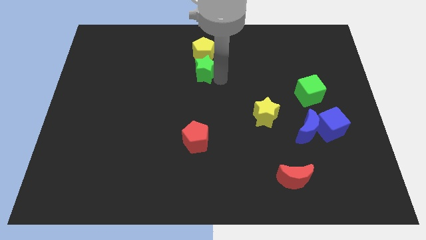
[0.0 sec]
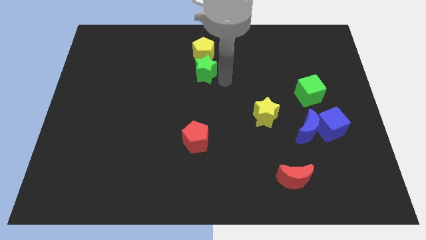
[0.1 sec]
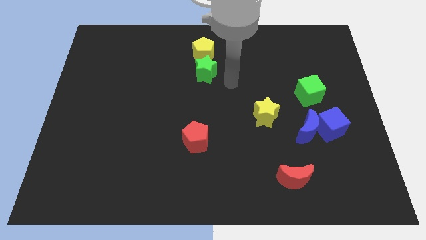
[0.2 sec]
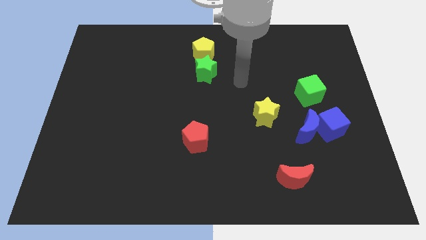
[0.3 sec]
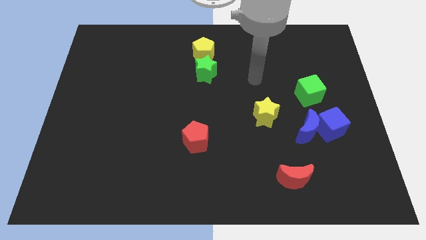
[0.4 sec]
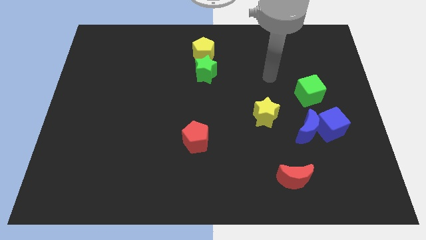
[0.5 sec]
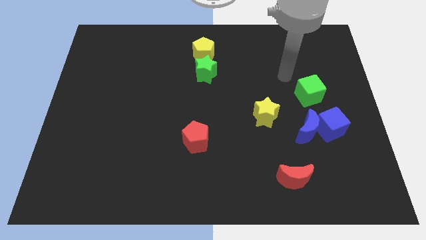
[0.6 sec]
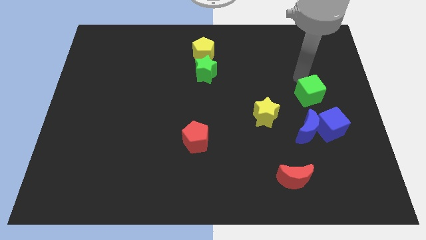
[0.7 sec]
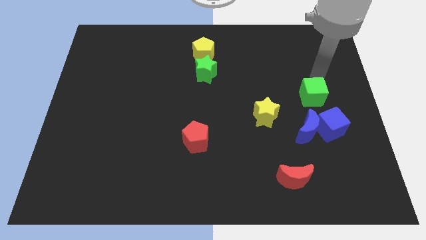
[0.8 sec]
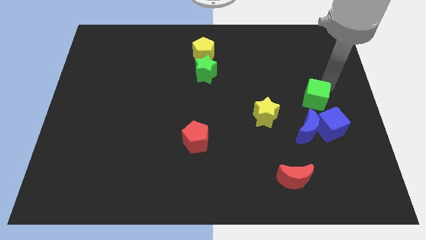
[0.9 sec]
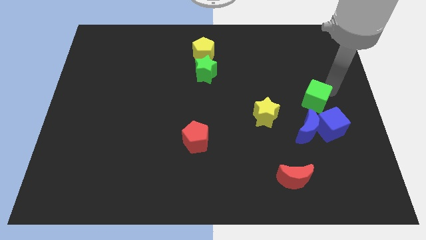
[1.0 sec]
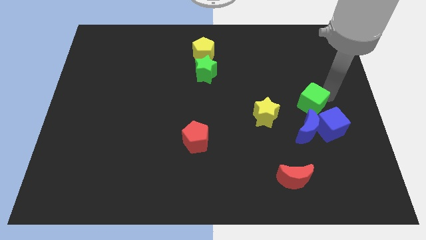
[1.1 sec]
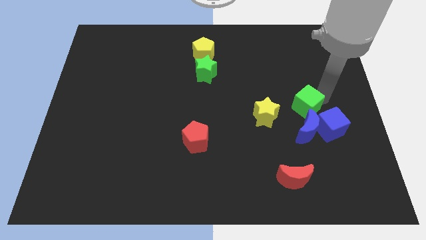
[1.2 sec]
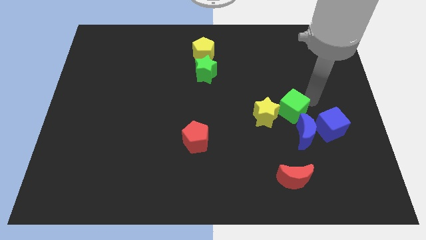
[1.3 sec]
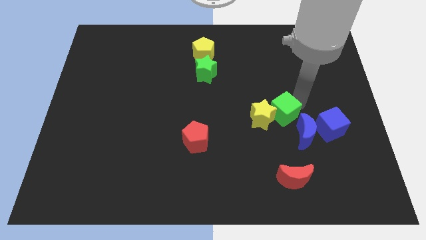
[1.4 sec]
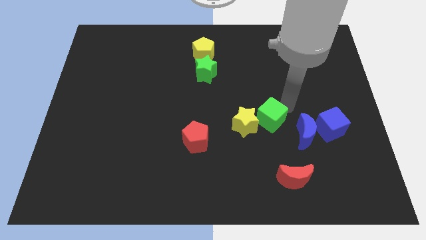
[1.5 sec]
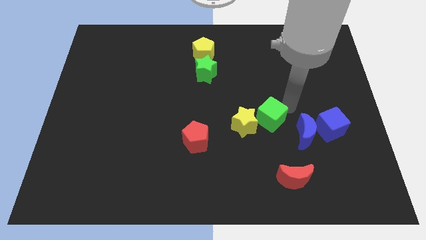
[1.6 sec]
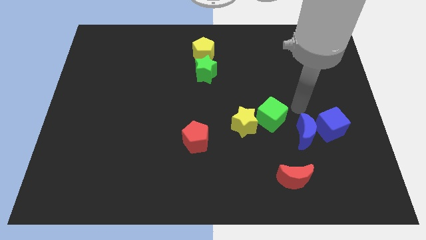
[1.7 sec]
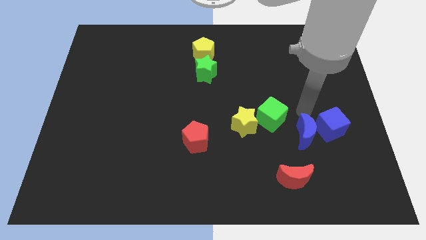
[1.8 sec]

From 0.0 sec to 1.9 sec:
push the green cube into yellow star towards center

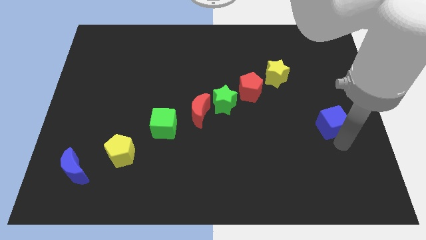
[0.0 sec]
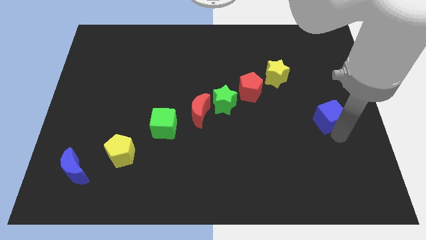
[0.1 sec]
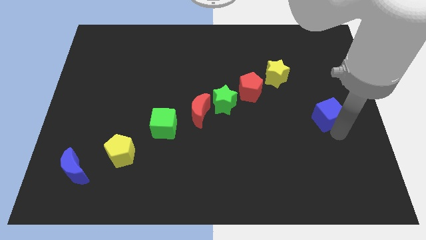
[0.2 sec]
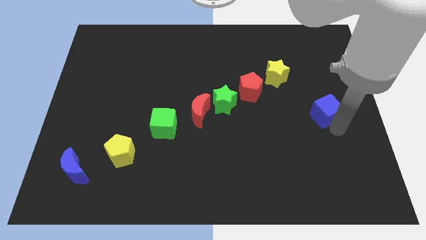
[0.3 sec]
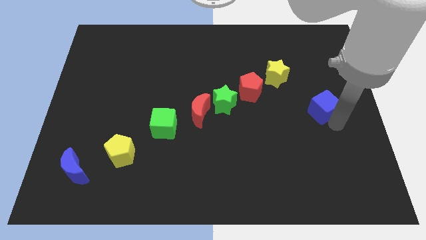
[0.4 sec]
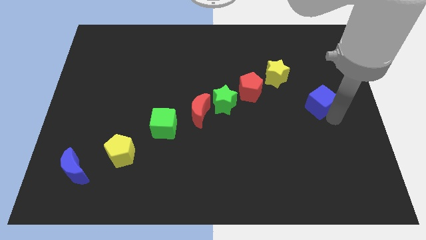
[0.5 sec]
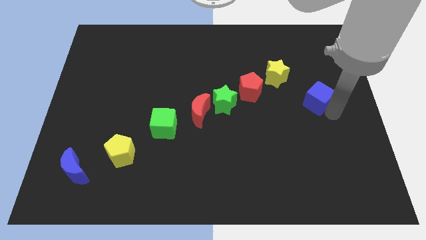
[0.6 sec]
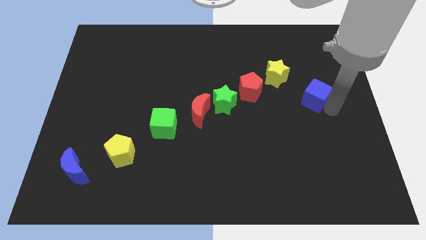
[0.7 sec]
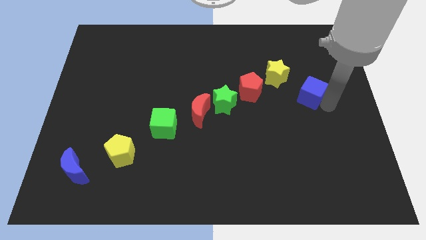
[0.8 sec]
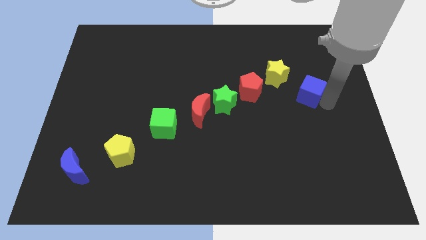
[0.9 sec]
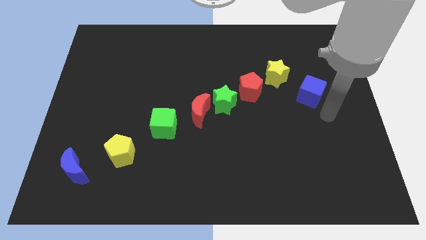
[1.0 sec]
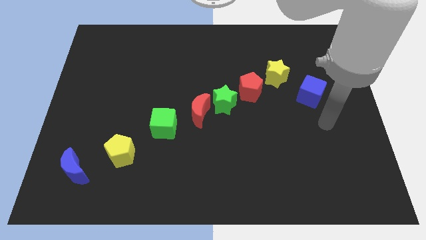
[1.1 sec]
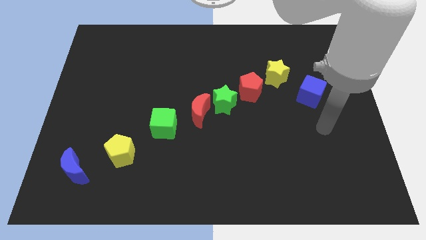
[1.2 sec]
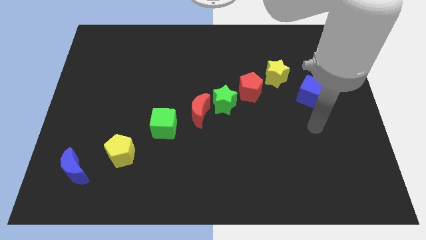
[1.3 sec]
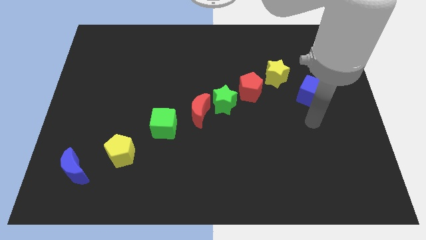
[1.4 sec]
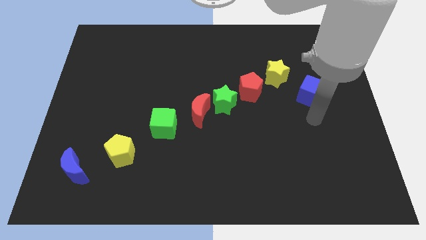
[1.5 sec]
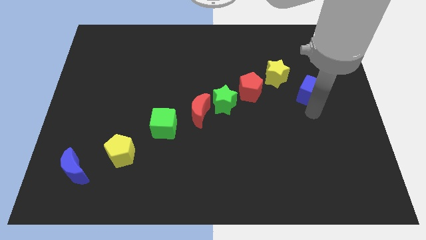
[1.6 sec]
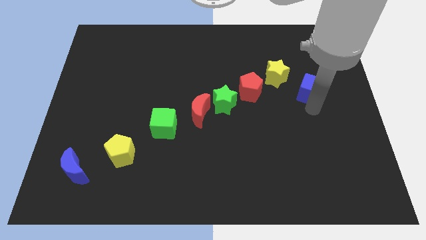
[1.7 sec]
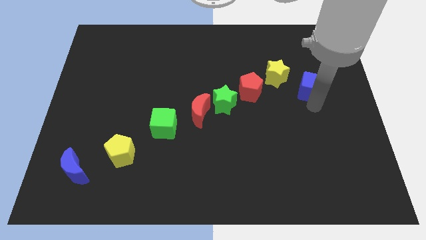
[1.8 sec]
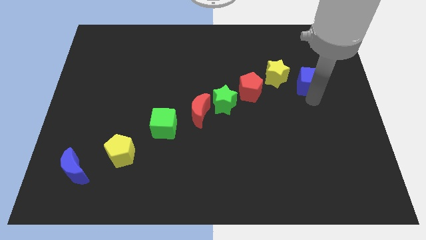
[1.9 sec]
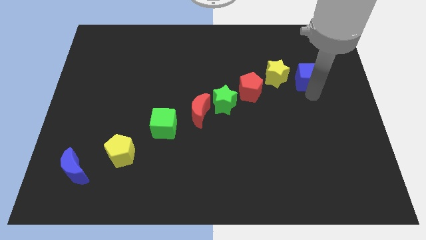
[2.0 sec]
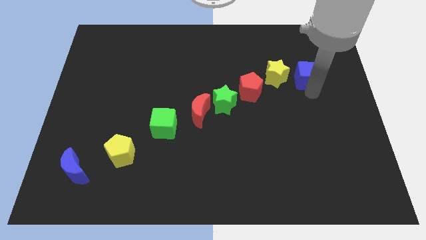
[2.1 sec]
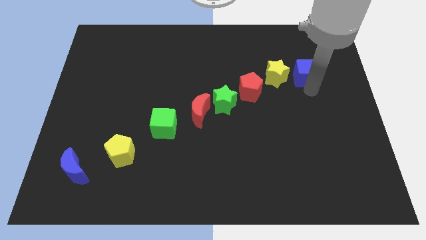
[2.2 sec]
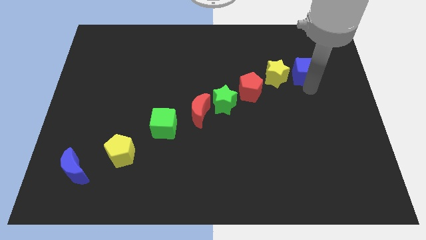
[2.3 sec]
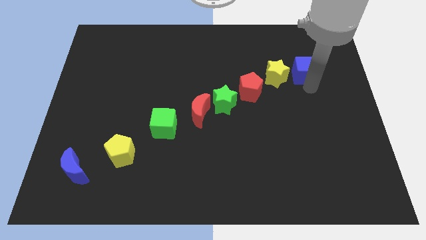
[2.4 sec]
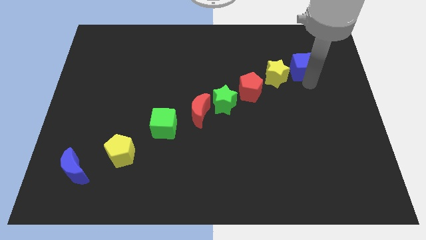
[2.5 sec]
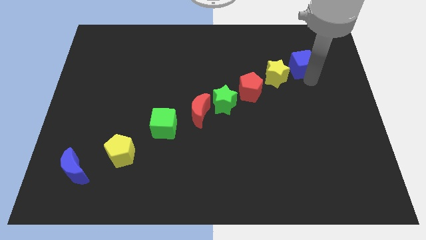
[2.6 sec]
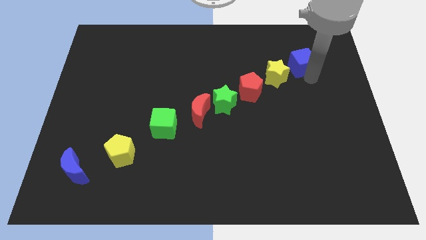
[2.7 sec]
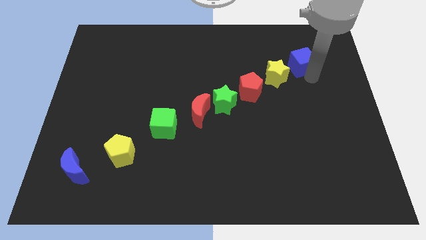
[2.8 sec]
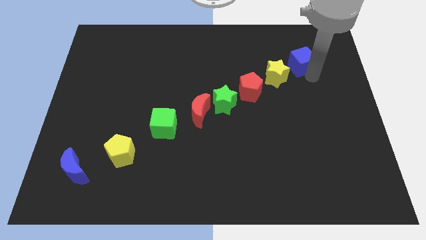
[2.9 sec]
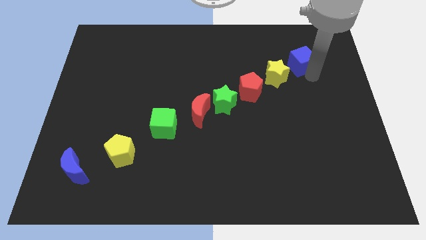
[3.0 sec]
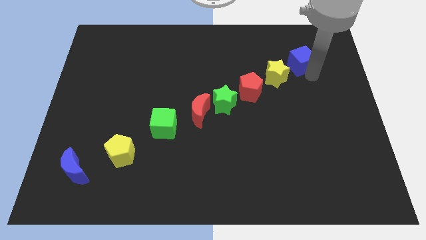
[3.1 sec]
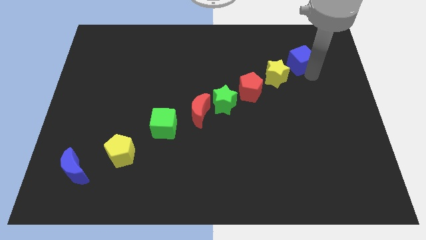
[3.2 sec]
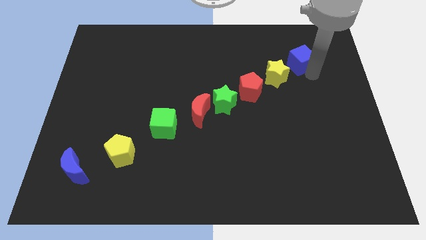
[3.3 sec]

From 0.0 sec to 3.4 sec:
place the blue cube next to the yellow star

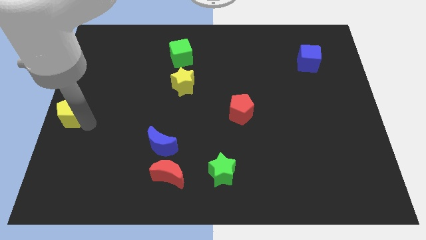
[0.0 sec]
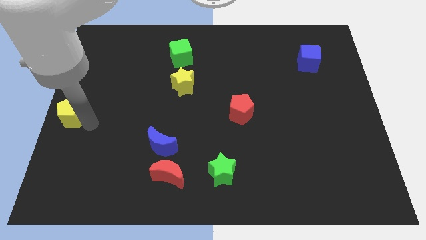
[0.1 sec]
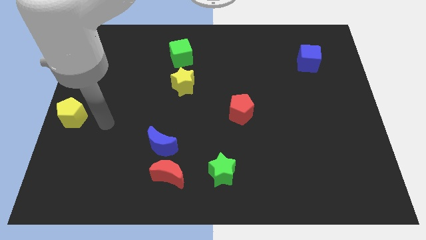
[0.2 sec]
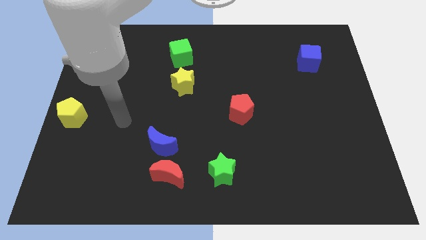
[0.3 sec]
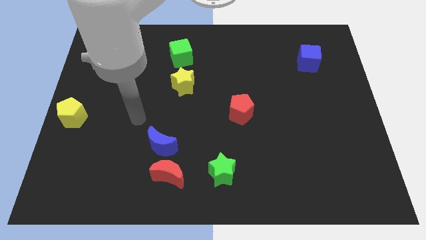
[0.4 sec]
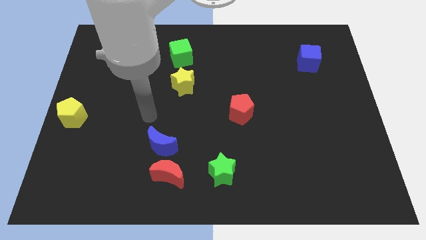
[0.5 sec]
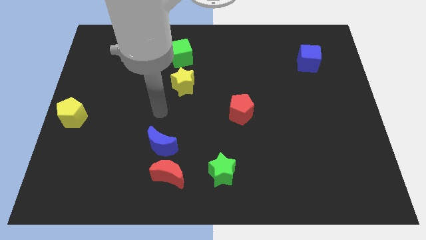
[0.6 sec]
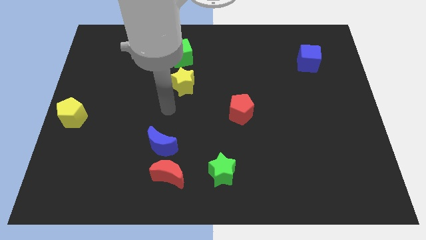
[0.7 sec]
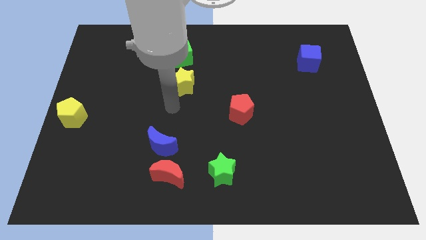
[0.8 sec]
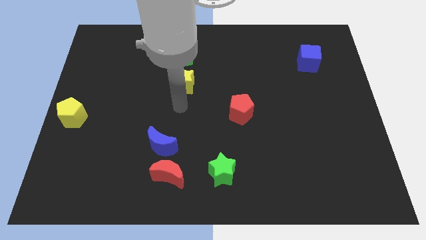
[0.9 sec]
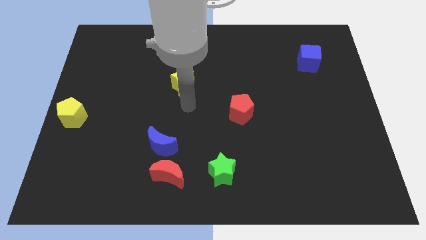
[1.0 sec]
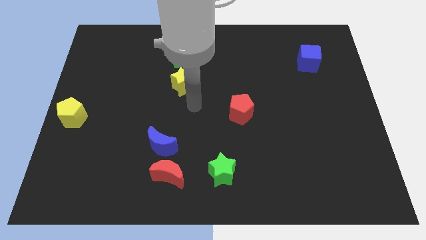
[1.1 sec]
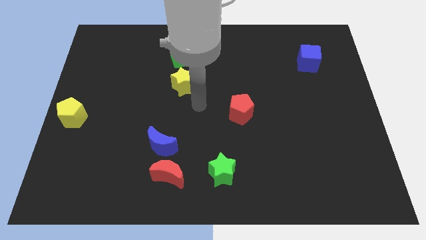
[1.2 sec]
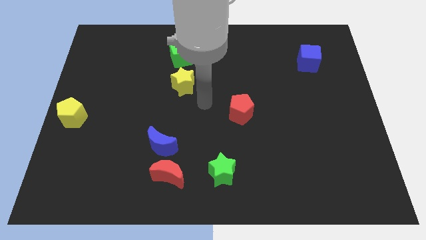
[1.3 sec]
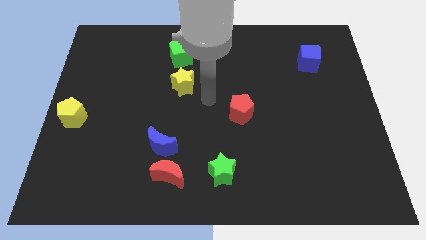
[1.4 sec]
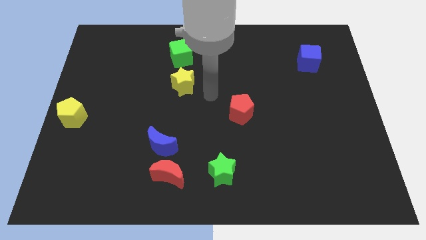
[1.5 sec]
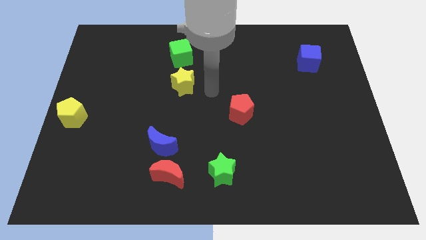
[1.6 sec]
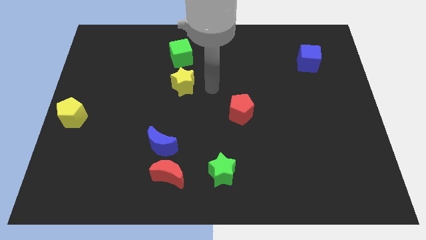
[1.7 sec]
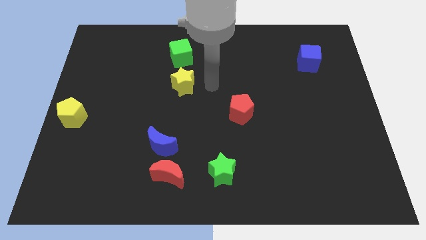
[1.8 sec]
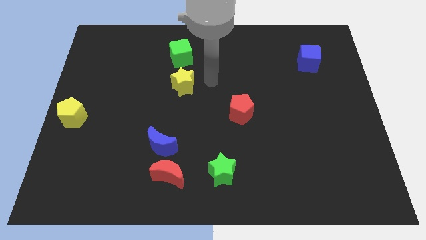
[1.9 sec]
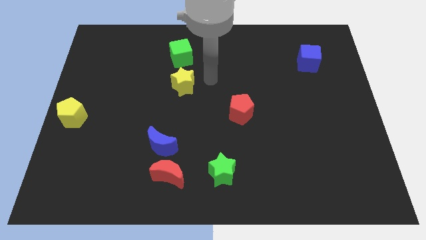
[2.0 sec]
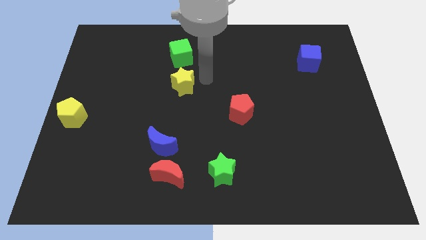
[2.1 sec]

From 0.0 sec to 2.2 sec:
move your arm to the right of yellow star

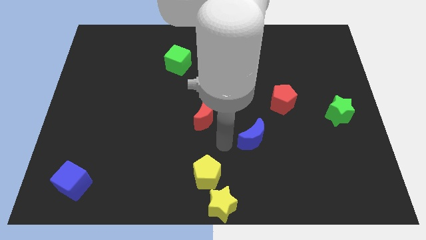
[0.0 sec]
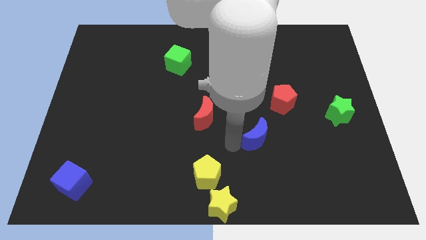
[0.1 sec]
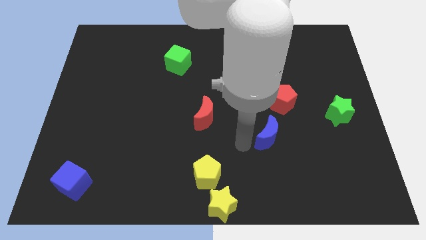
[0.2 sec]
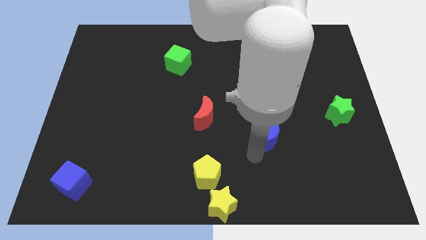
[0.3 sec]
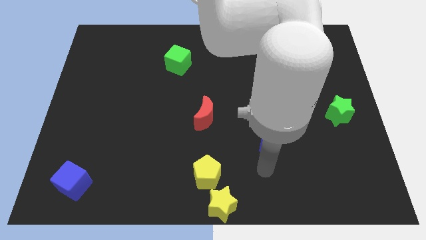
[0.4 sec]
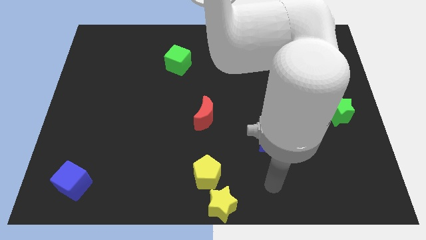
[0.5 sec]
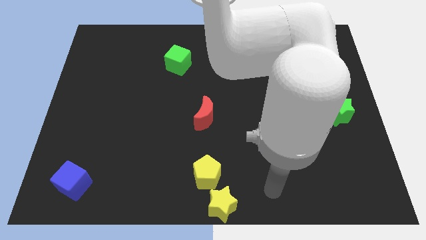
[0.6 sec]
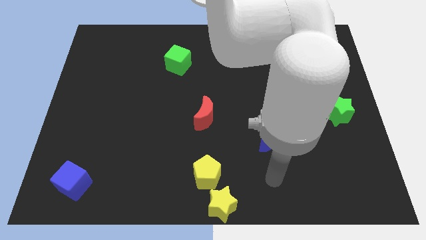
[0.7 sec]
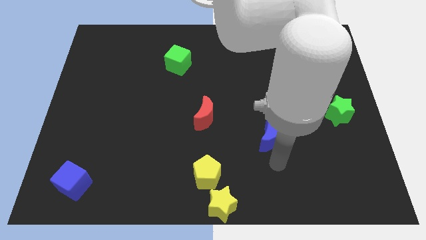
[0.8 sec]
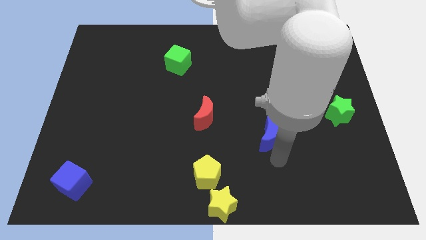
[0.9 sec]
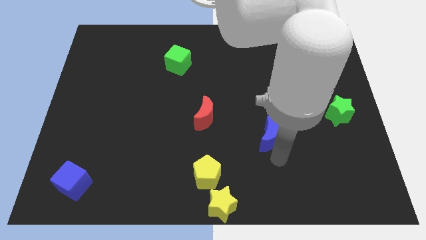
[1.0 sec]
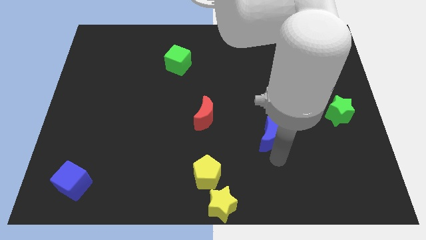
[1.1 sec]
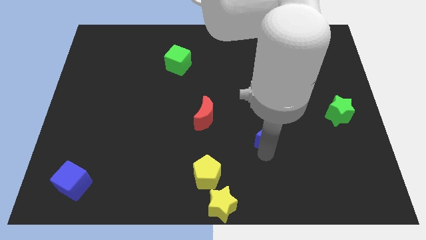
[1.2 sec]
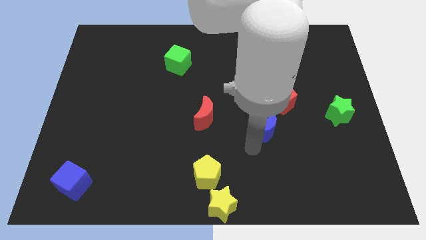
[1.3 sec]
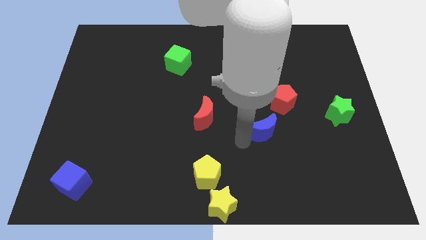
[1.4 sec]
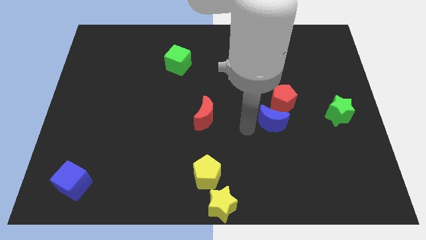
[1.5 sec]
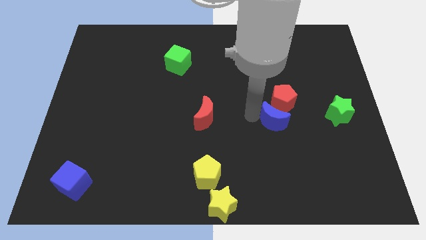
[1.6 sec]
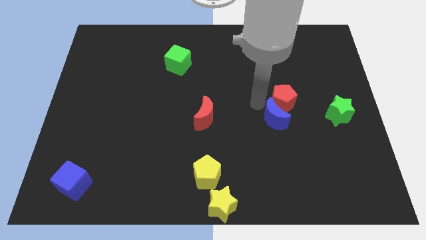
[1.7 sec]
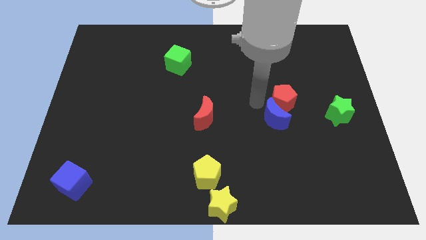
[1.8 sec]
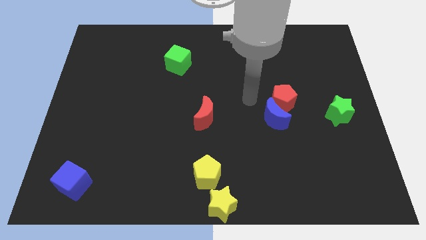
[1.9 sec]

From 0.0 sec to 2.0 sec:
push the blue crescent to the bottom left side of the red pentagon
